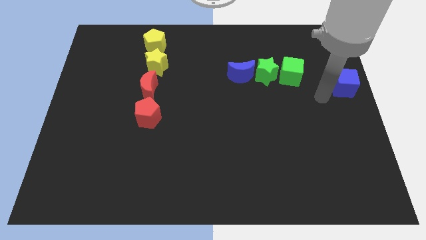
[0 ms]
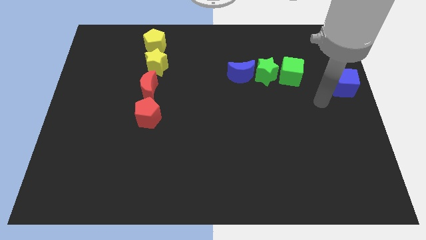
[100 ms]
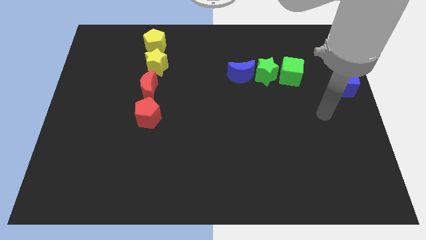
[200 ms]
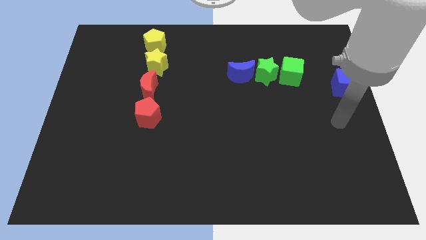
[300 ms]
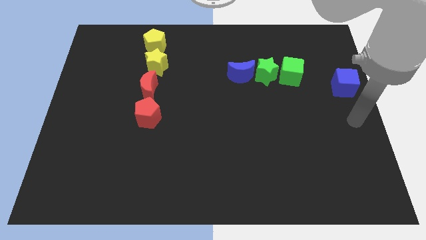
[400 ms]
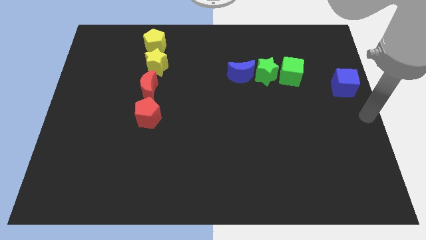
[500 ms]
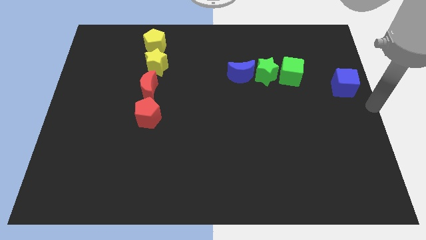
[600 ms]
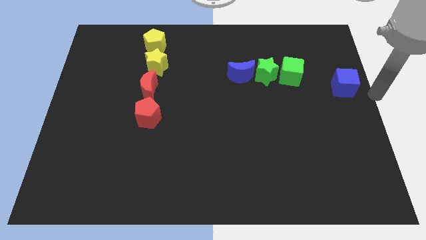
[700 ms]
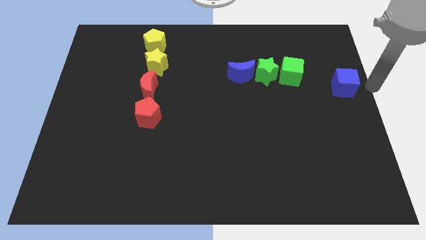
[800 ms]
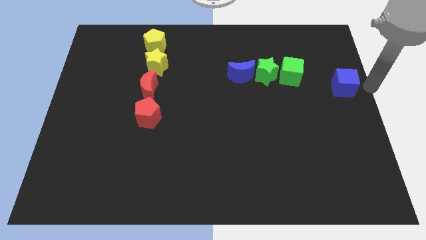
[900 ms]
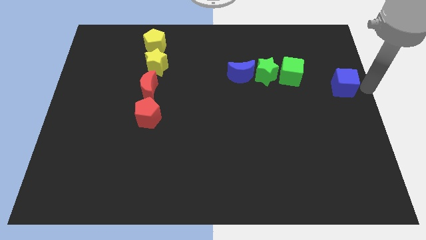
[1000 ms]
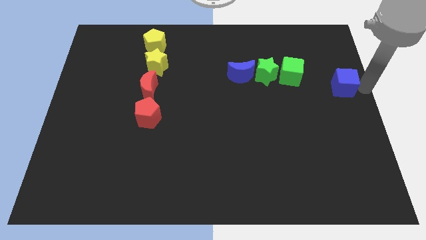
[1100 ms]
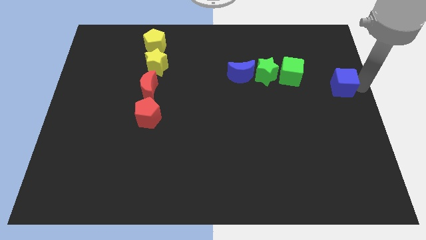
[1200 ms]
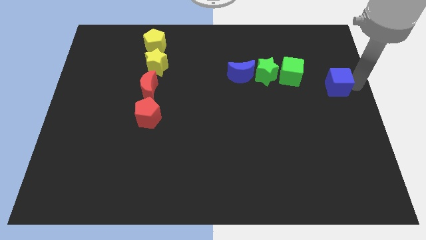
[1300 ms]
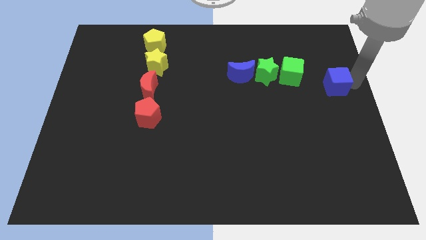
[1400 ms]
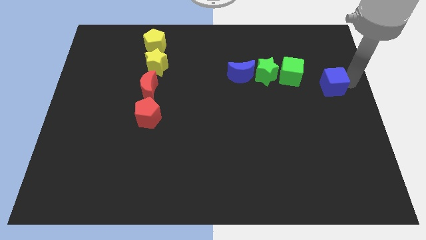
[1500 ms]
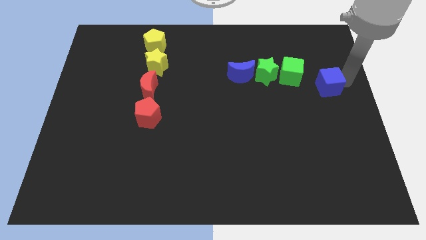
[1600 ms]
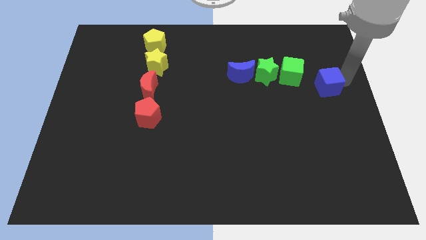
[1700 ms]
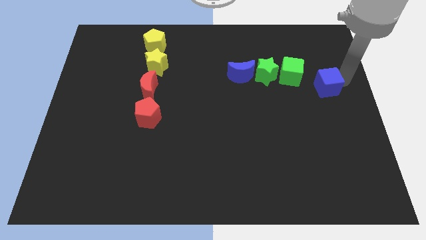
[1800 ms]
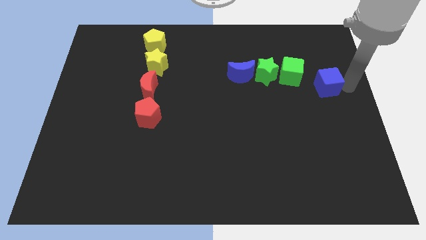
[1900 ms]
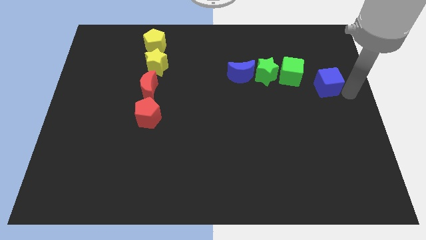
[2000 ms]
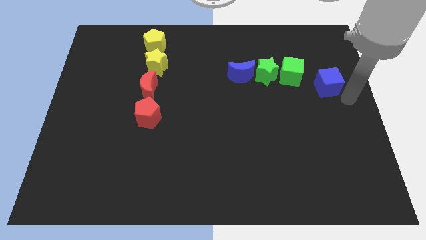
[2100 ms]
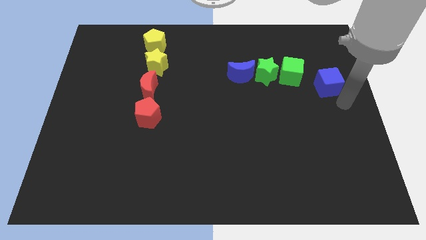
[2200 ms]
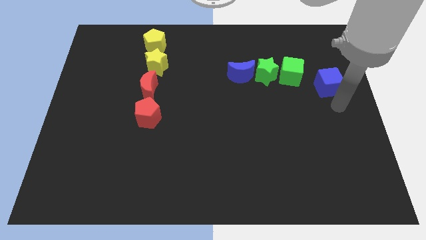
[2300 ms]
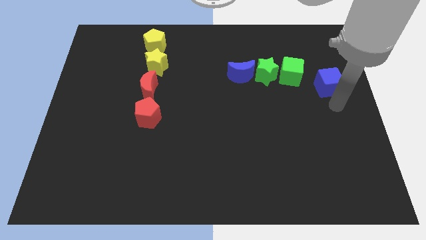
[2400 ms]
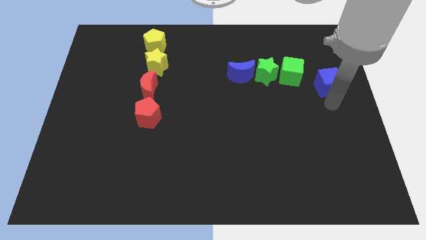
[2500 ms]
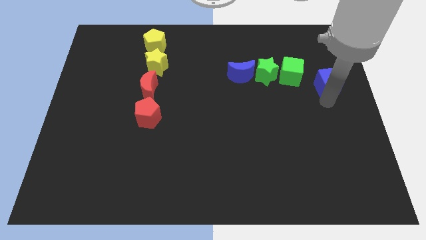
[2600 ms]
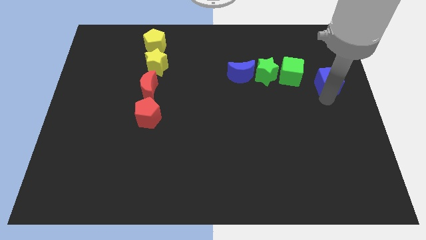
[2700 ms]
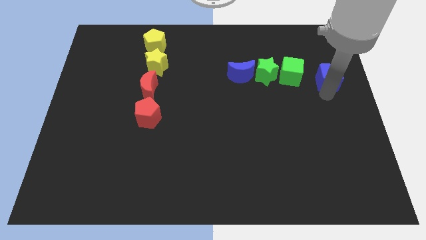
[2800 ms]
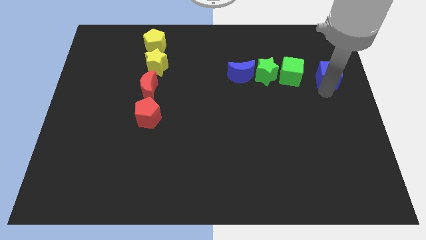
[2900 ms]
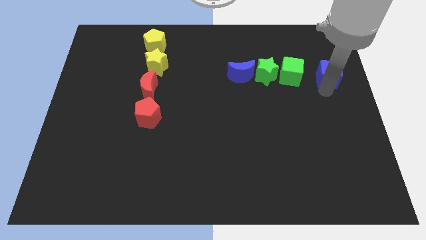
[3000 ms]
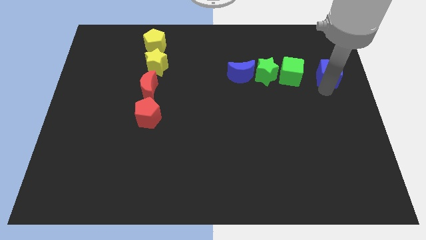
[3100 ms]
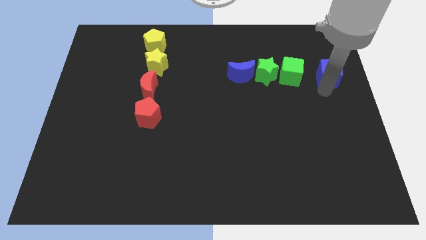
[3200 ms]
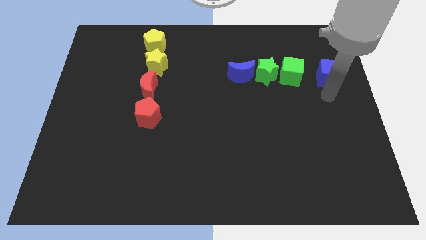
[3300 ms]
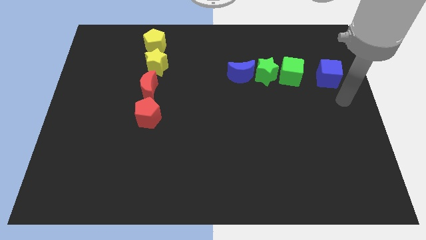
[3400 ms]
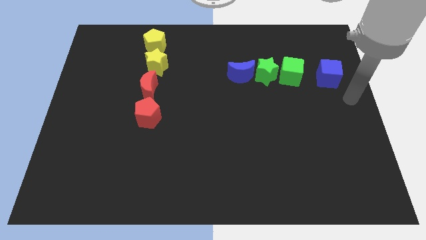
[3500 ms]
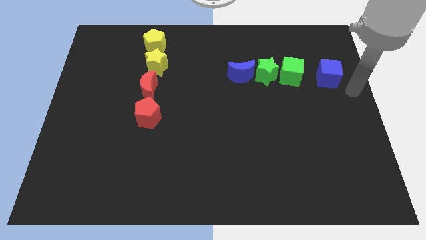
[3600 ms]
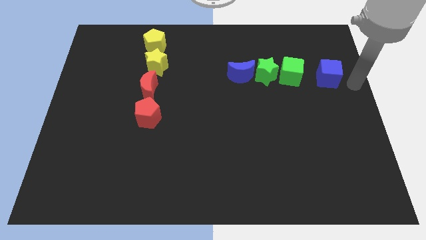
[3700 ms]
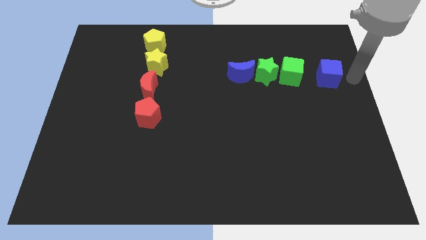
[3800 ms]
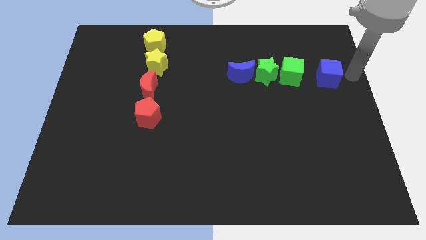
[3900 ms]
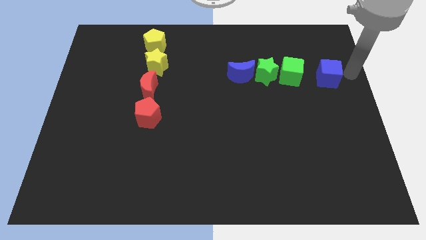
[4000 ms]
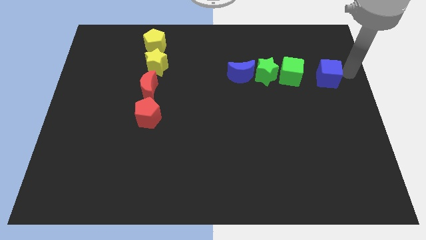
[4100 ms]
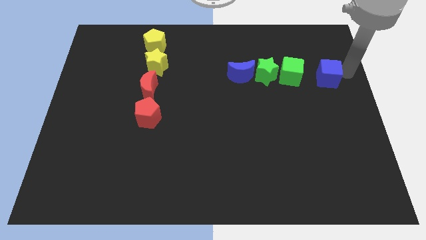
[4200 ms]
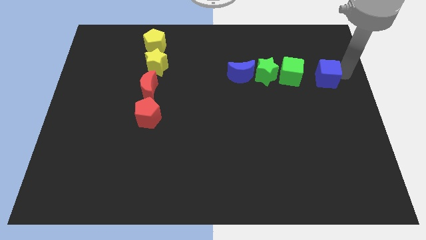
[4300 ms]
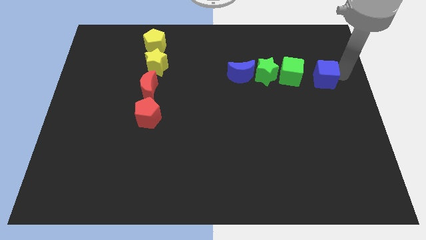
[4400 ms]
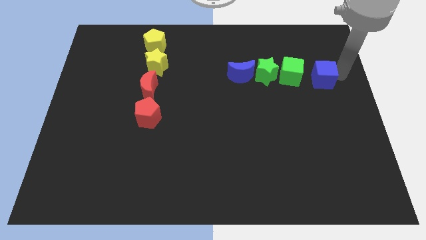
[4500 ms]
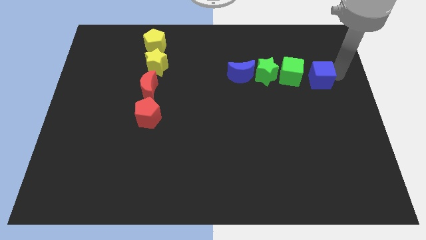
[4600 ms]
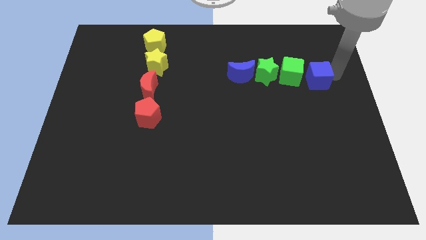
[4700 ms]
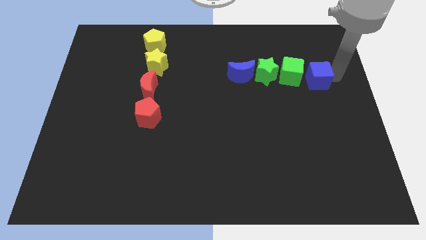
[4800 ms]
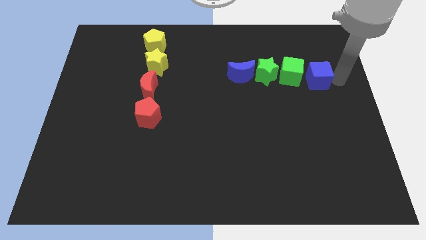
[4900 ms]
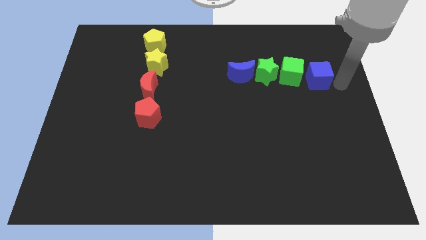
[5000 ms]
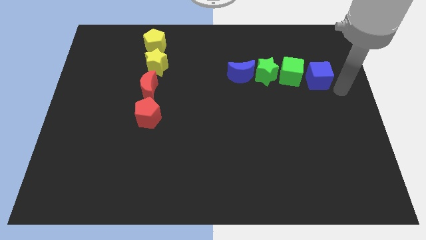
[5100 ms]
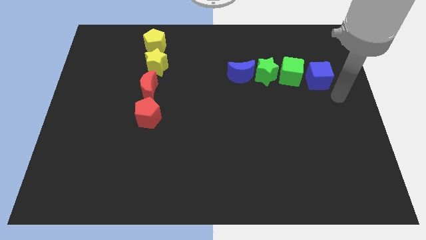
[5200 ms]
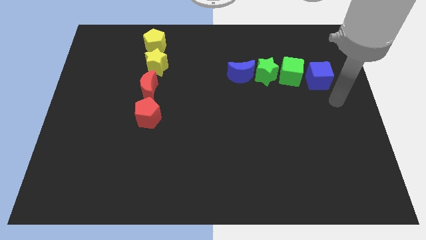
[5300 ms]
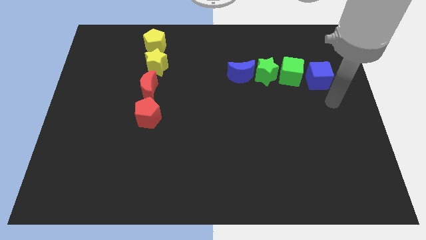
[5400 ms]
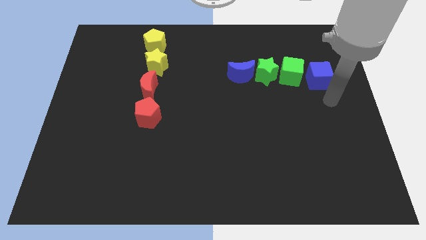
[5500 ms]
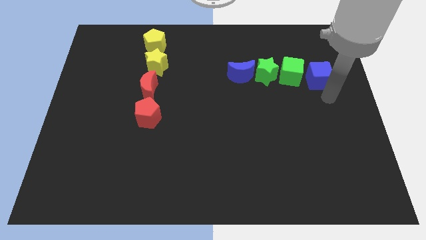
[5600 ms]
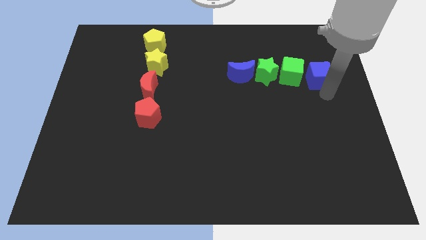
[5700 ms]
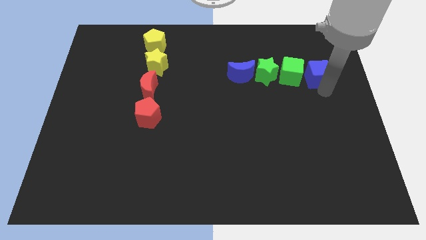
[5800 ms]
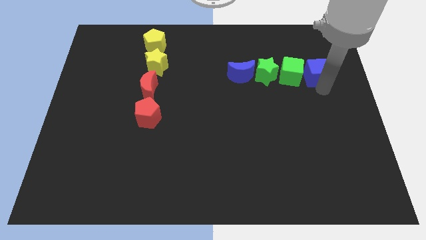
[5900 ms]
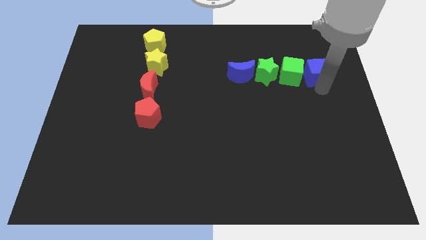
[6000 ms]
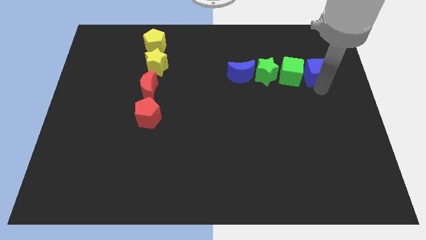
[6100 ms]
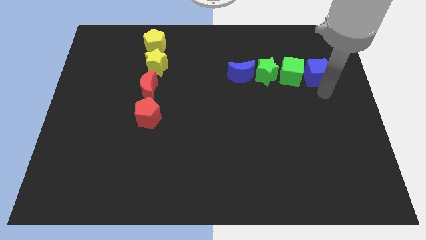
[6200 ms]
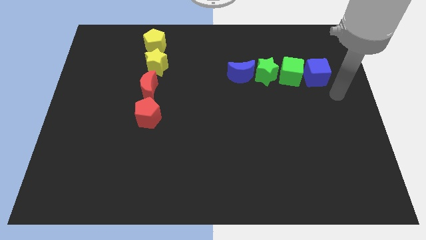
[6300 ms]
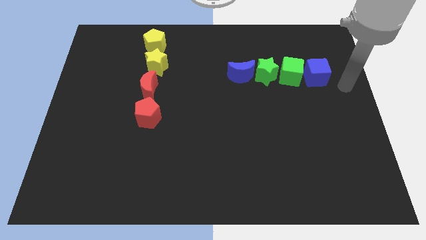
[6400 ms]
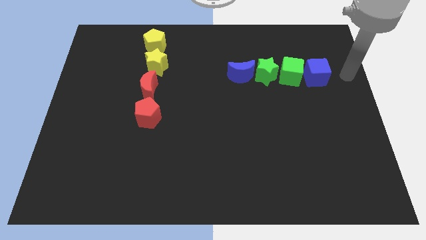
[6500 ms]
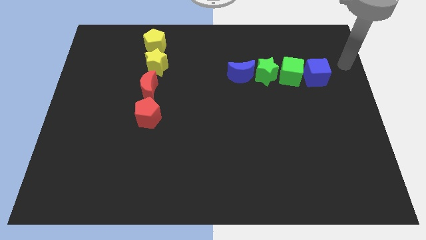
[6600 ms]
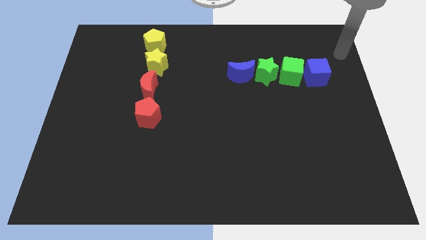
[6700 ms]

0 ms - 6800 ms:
place the blue cube to the right of the green cube

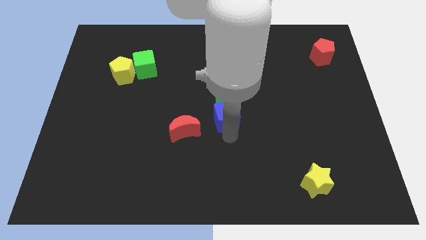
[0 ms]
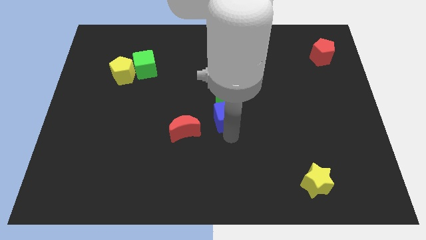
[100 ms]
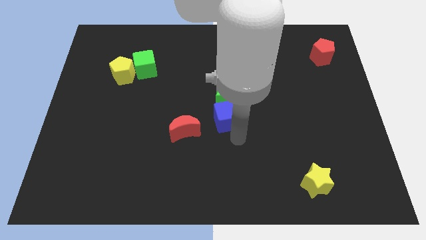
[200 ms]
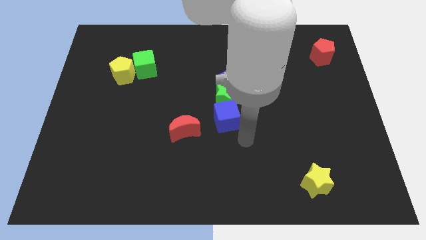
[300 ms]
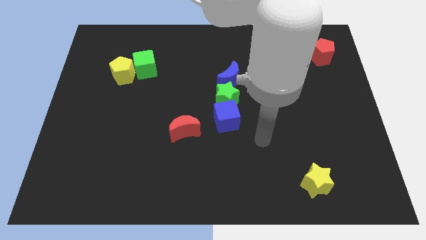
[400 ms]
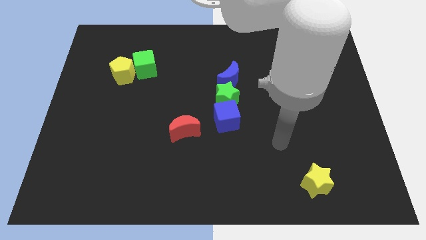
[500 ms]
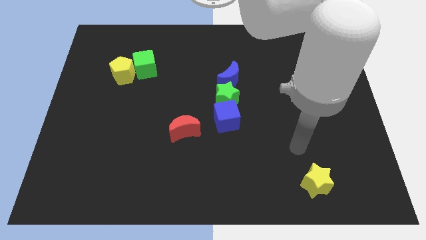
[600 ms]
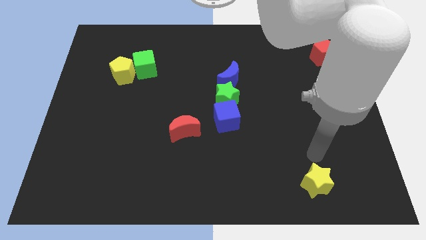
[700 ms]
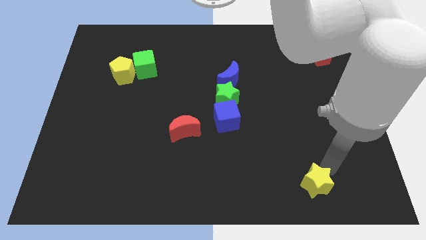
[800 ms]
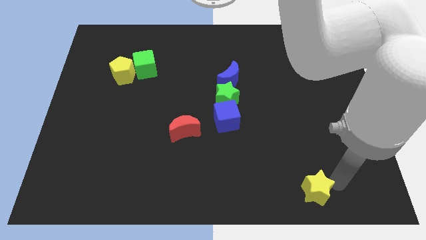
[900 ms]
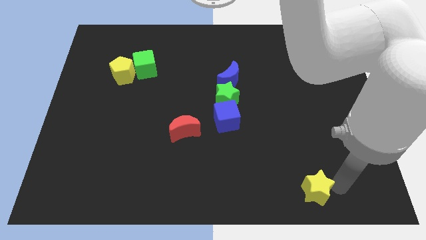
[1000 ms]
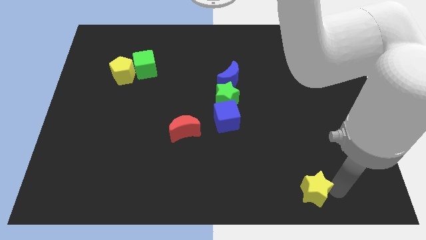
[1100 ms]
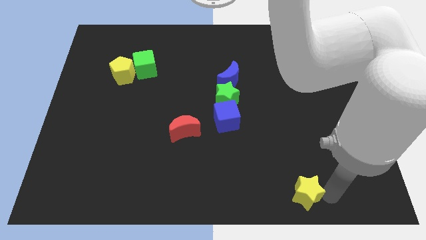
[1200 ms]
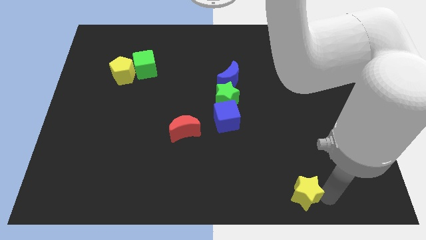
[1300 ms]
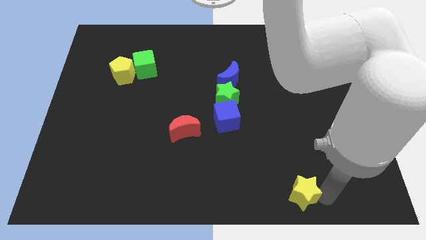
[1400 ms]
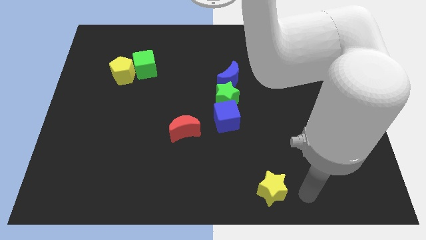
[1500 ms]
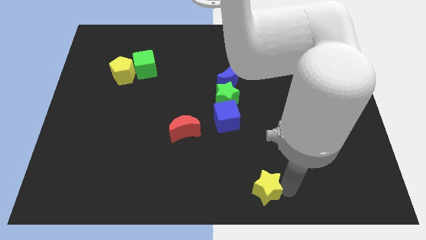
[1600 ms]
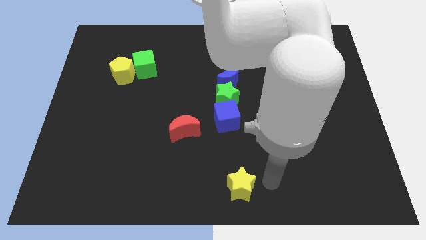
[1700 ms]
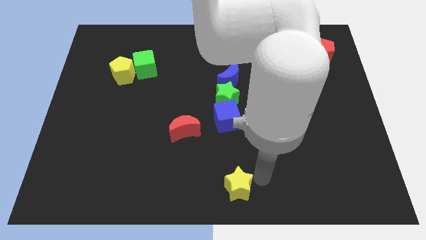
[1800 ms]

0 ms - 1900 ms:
push the yellow star towards the bottom center of the board

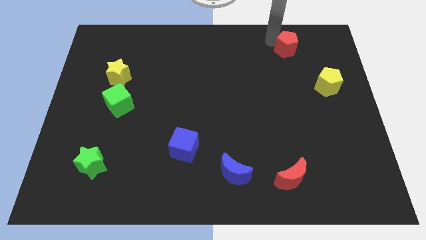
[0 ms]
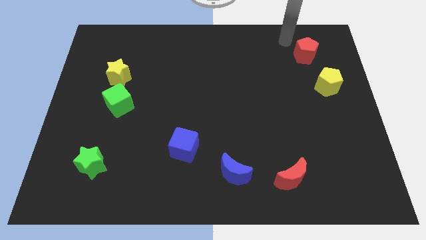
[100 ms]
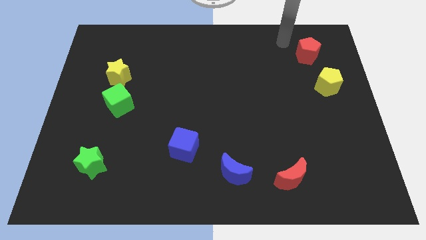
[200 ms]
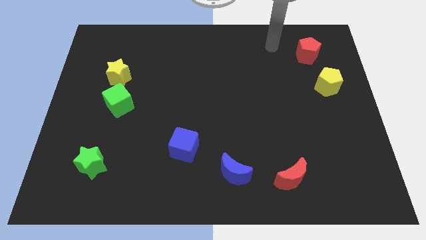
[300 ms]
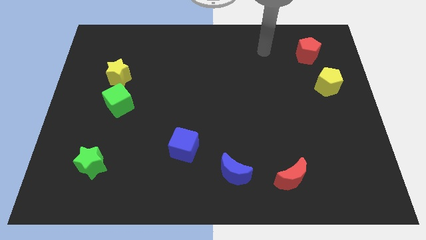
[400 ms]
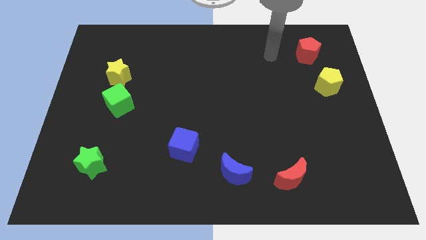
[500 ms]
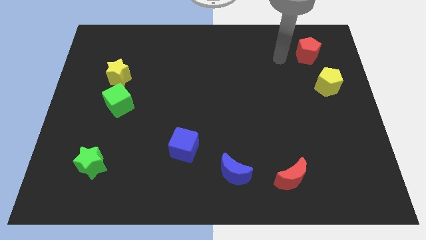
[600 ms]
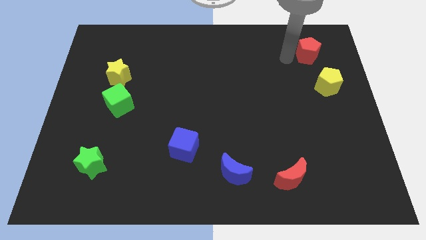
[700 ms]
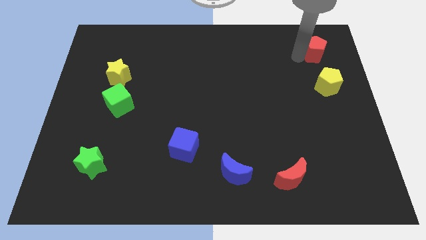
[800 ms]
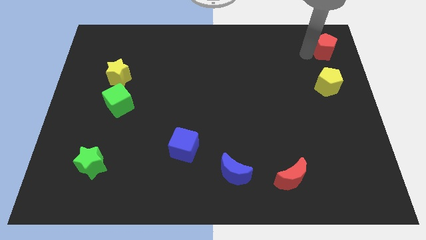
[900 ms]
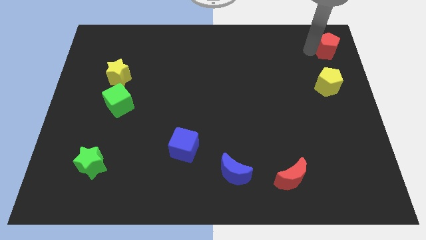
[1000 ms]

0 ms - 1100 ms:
push the red pentagon above the yellow pentagon
